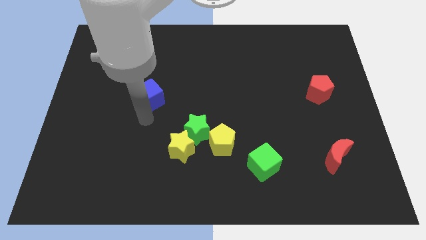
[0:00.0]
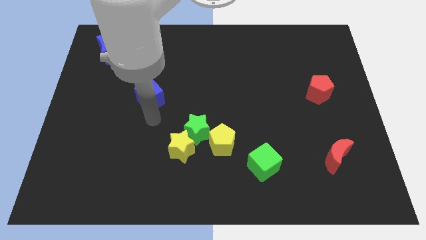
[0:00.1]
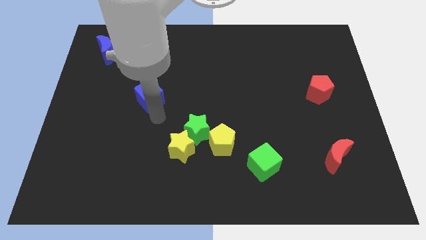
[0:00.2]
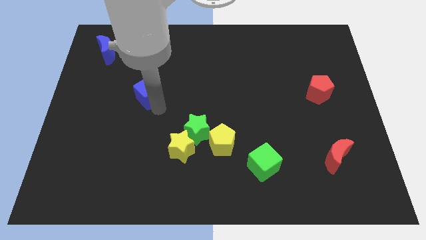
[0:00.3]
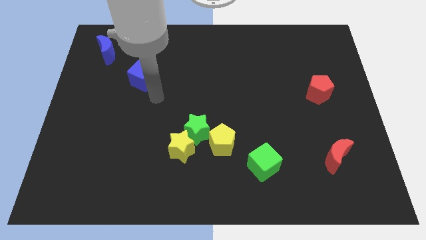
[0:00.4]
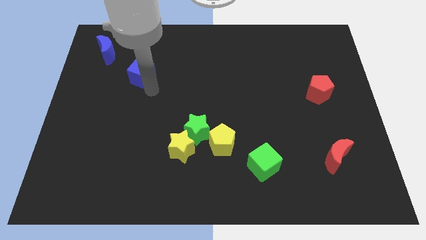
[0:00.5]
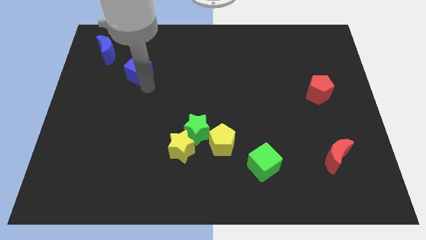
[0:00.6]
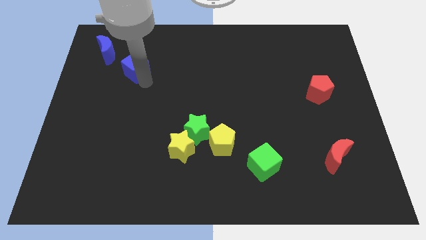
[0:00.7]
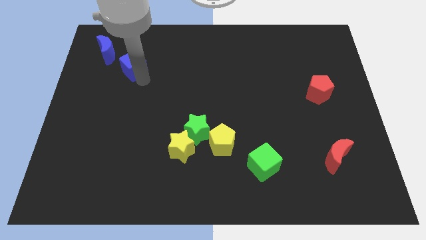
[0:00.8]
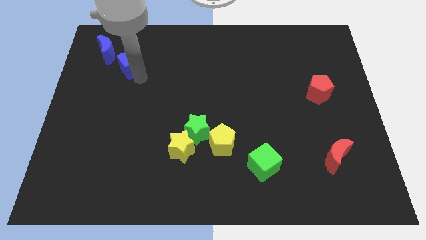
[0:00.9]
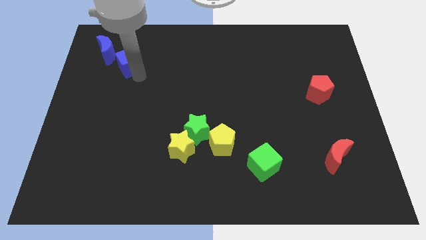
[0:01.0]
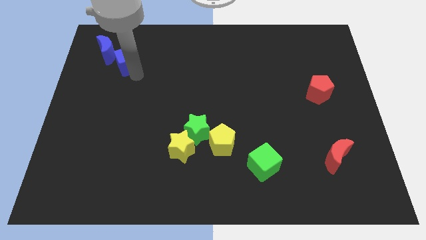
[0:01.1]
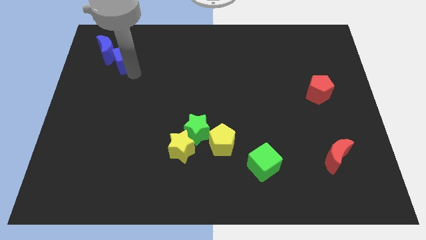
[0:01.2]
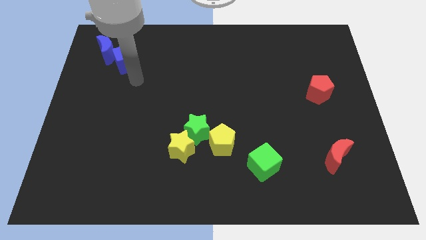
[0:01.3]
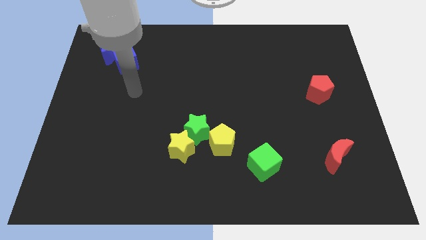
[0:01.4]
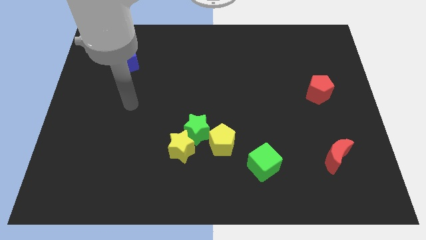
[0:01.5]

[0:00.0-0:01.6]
push the blue cube into the blue crescent

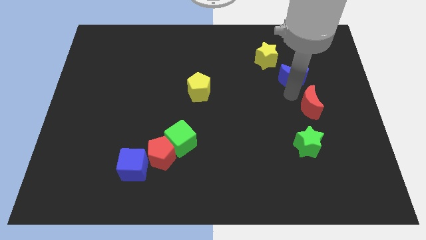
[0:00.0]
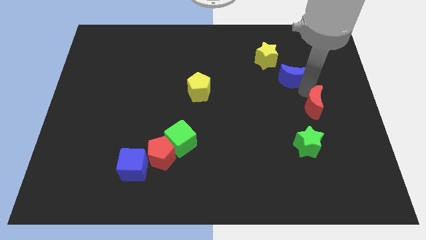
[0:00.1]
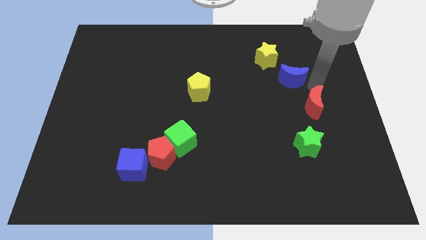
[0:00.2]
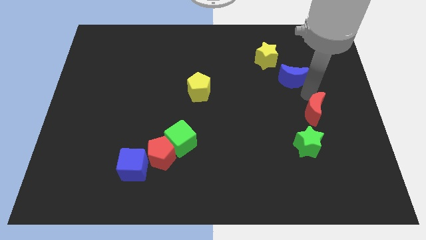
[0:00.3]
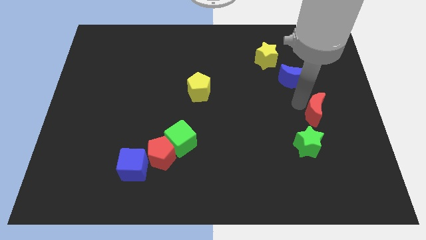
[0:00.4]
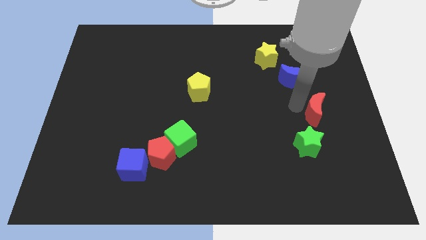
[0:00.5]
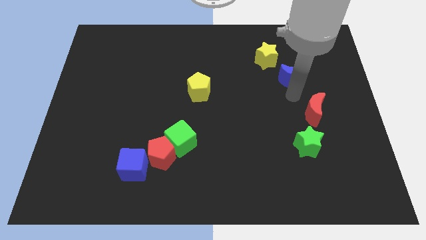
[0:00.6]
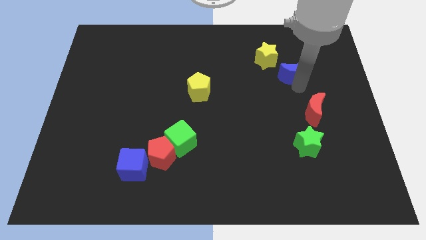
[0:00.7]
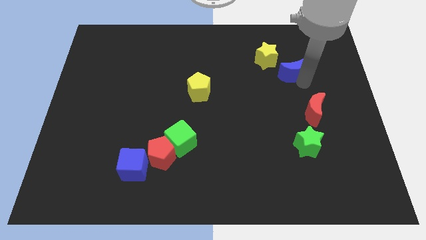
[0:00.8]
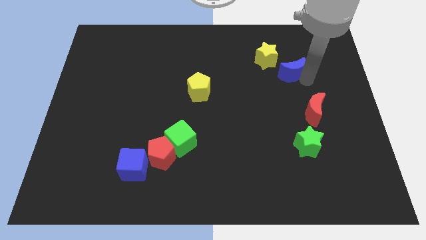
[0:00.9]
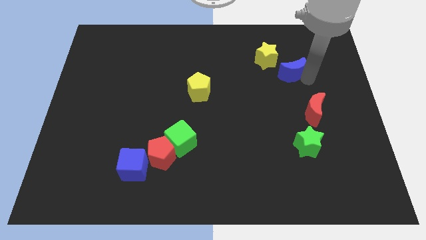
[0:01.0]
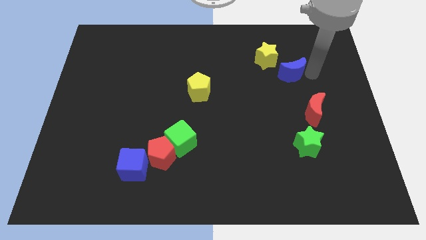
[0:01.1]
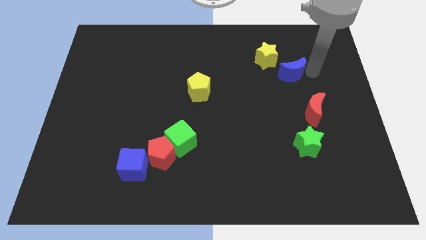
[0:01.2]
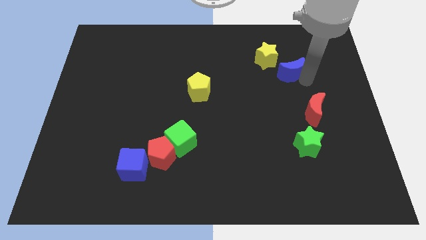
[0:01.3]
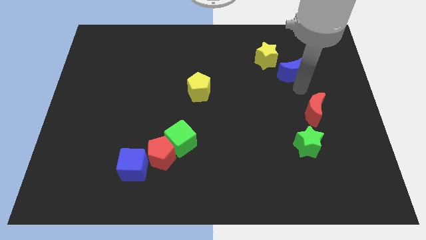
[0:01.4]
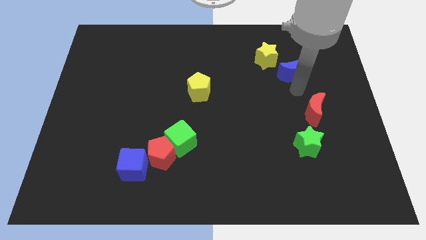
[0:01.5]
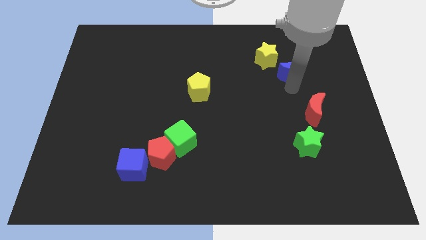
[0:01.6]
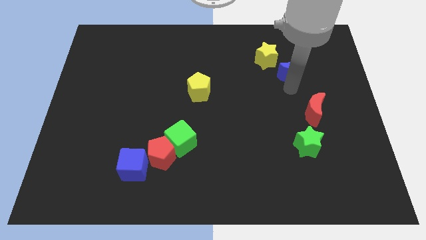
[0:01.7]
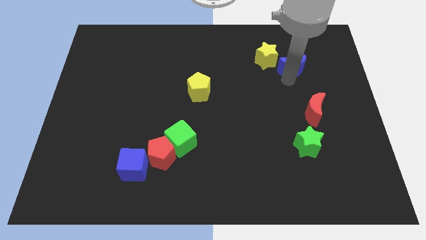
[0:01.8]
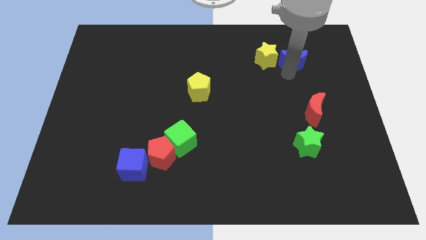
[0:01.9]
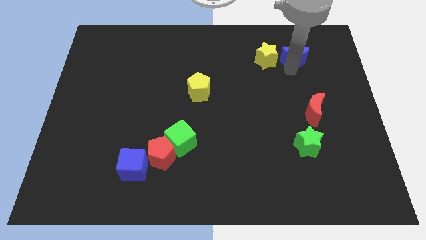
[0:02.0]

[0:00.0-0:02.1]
place the blue moon to the right side of the yellow star

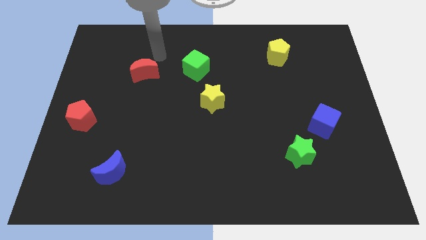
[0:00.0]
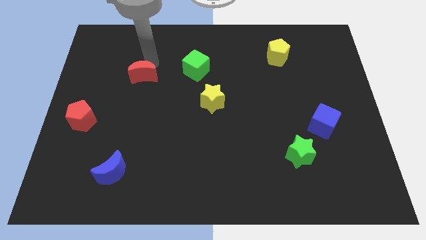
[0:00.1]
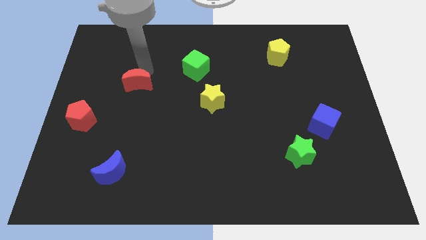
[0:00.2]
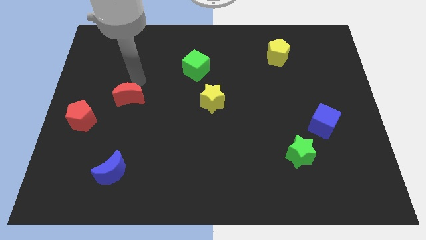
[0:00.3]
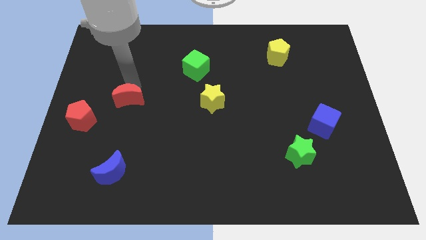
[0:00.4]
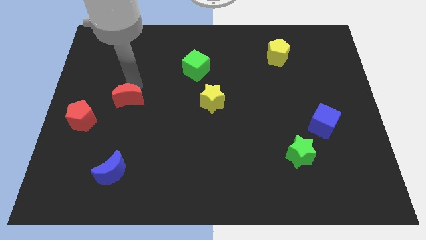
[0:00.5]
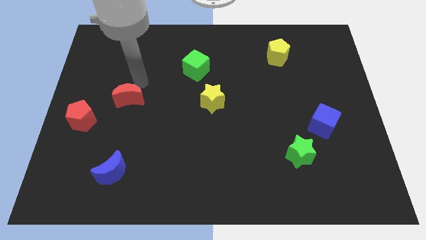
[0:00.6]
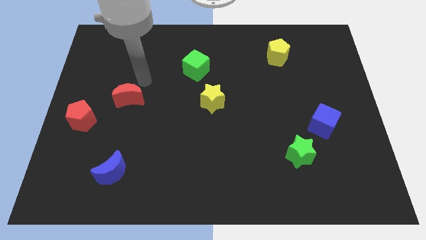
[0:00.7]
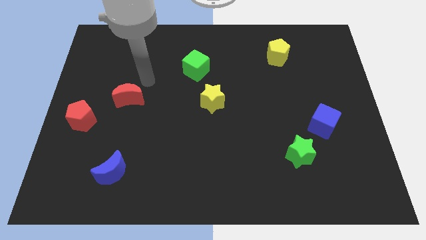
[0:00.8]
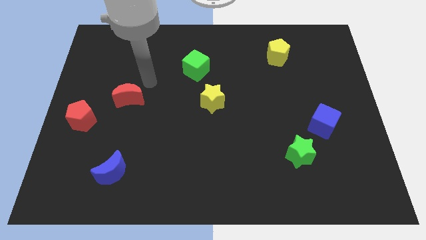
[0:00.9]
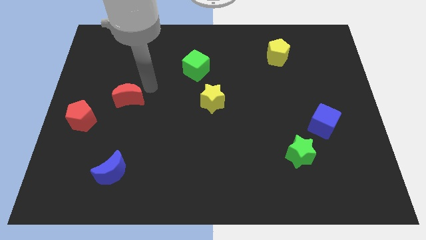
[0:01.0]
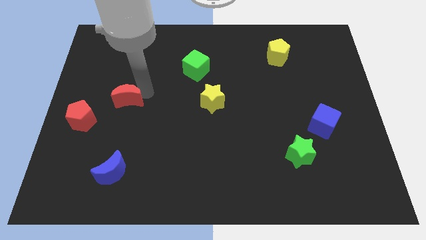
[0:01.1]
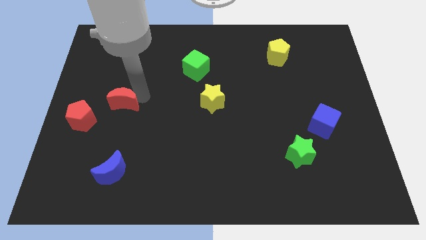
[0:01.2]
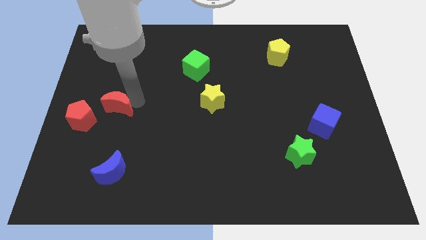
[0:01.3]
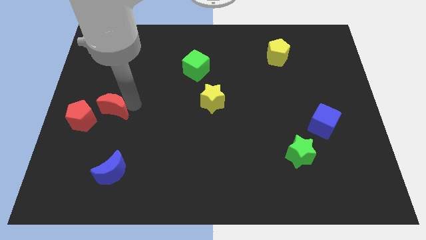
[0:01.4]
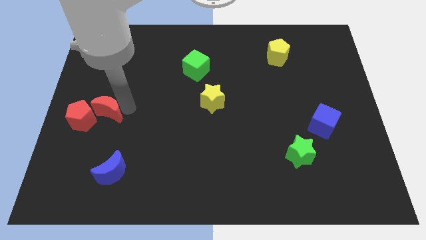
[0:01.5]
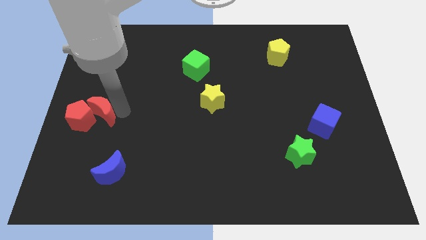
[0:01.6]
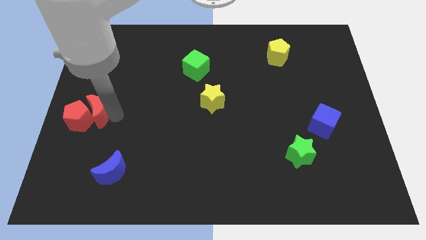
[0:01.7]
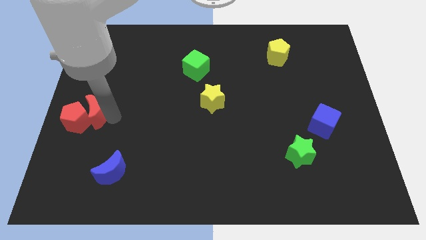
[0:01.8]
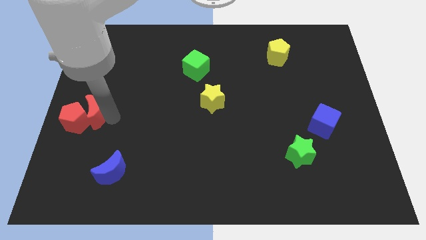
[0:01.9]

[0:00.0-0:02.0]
move the red crescent into the red pentagon

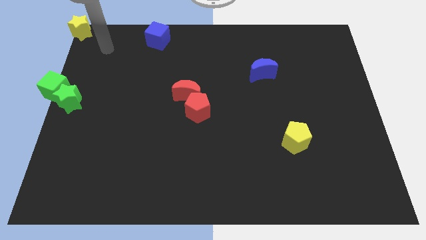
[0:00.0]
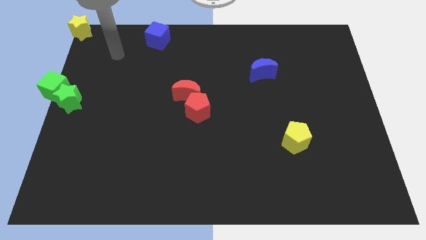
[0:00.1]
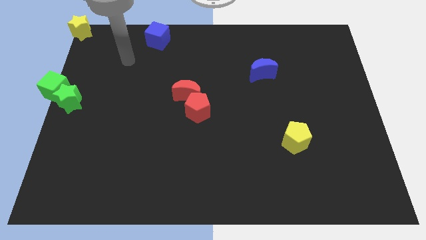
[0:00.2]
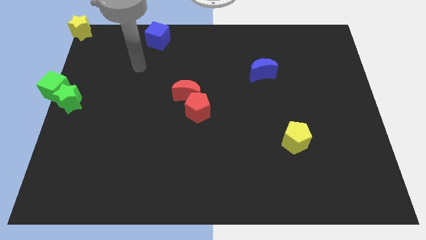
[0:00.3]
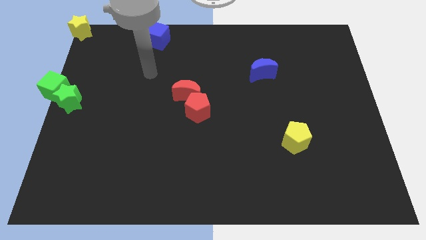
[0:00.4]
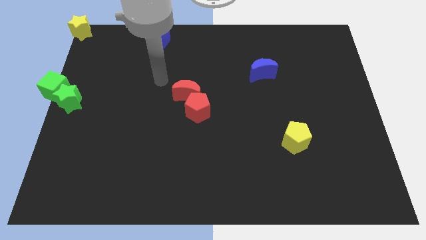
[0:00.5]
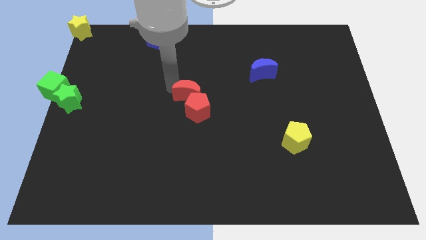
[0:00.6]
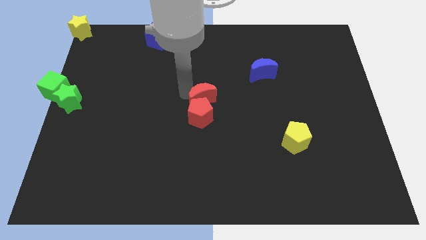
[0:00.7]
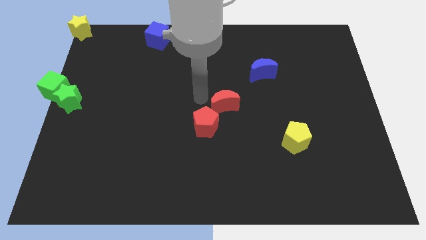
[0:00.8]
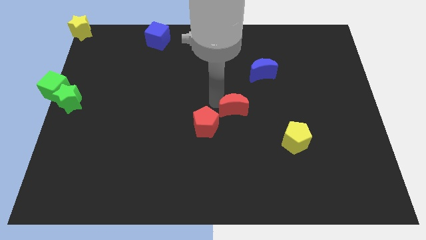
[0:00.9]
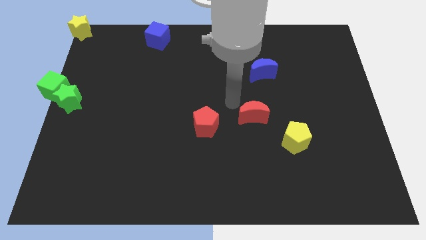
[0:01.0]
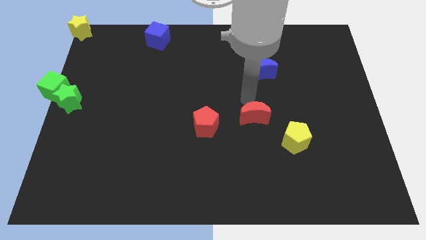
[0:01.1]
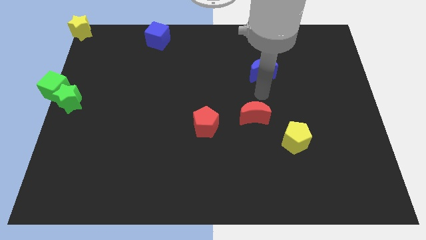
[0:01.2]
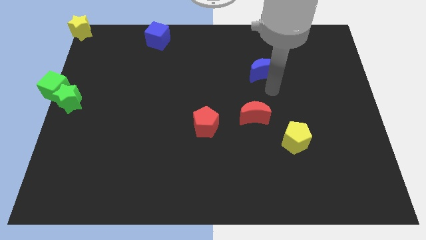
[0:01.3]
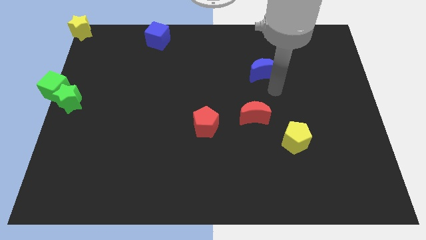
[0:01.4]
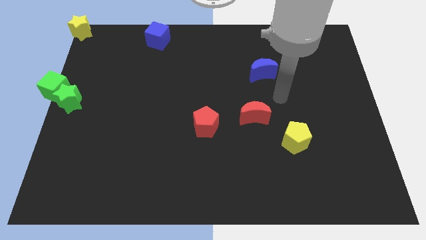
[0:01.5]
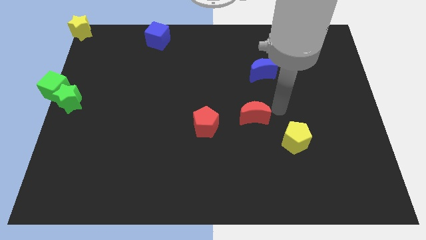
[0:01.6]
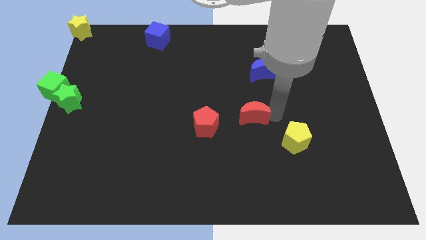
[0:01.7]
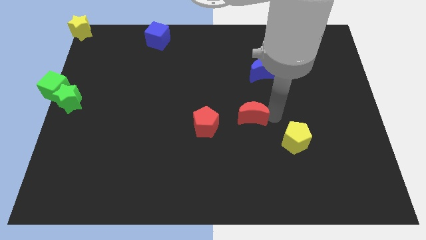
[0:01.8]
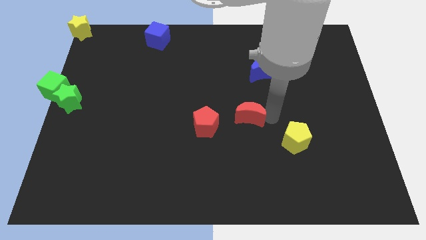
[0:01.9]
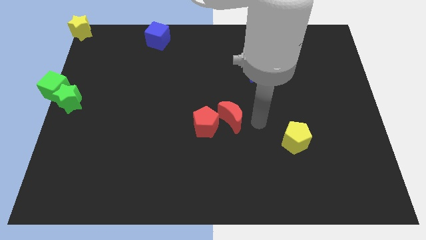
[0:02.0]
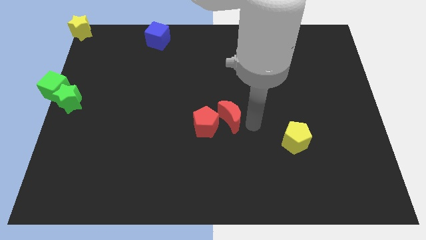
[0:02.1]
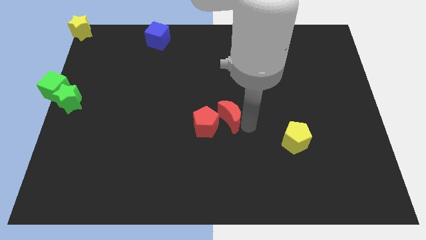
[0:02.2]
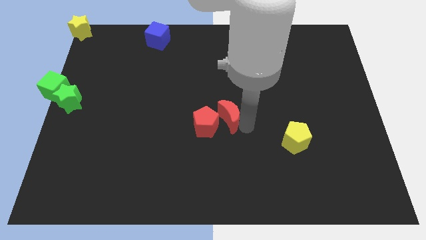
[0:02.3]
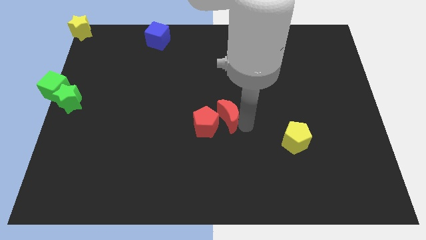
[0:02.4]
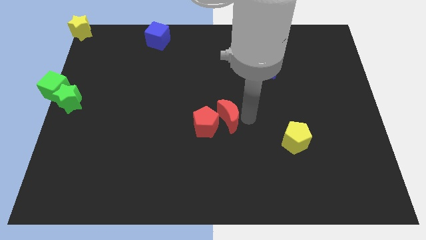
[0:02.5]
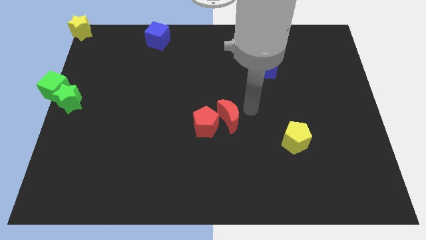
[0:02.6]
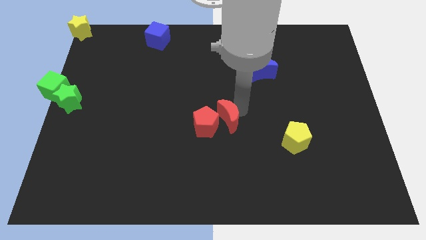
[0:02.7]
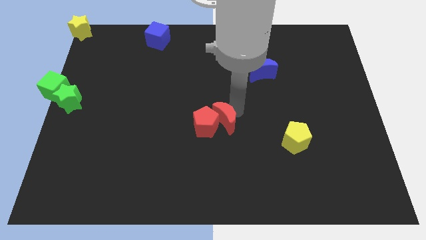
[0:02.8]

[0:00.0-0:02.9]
separate red moon from the red pentagon

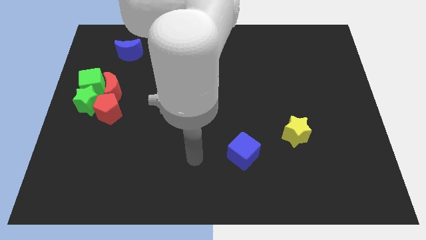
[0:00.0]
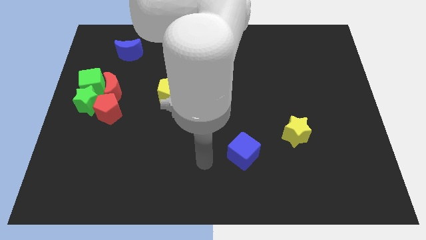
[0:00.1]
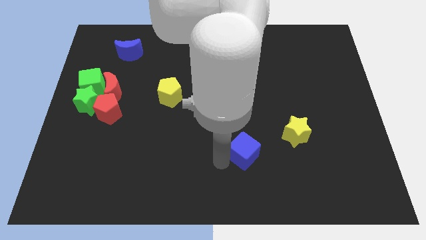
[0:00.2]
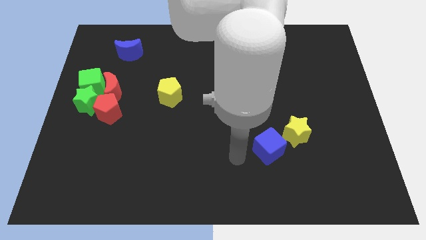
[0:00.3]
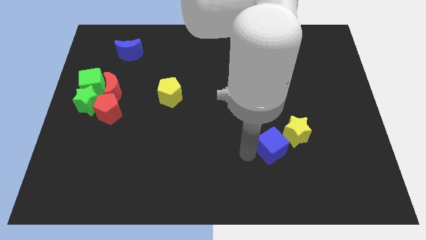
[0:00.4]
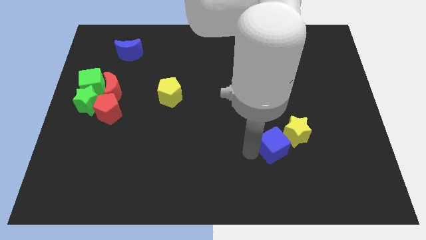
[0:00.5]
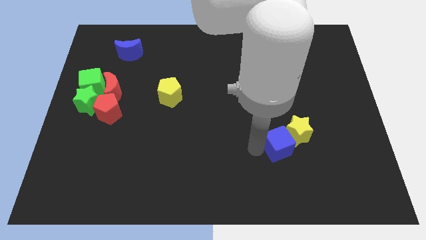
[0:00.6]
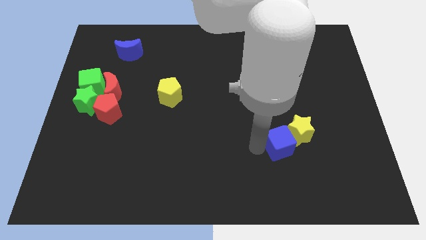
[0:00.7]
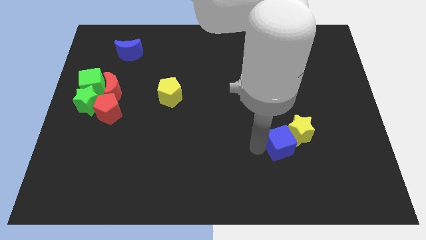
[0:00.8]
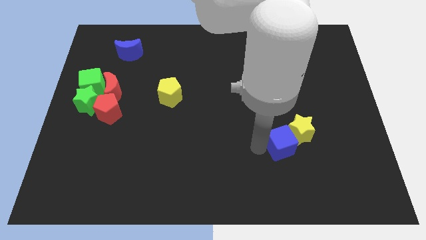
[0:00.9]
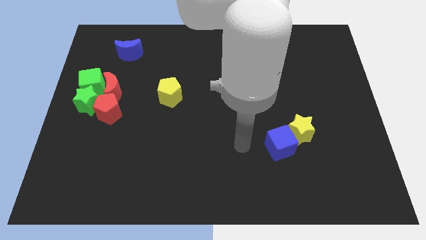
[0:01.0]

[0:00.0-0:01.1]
make the blue cube touch the left side of the yellow star
